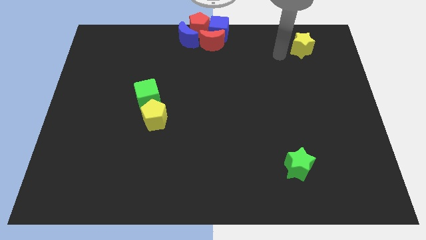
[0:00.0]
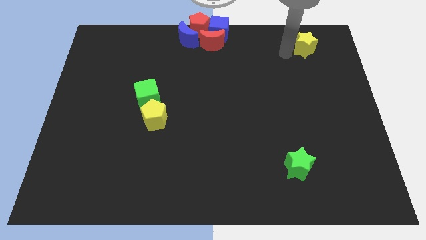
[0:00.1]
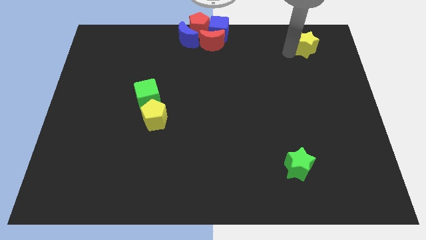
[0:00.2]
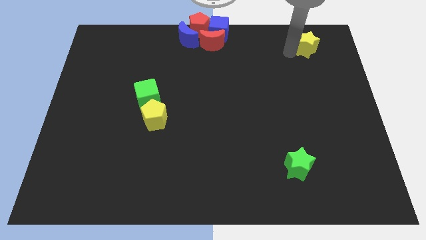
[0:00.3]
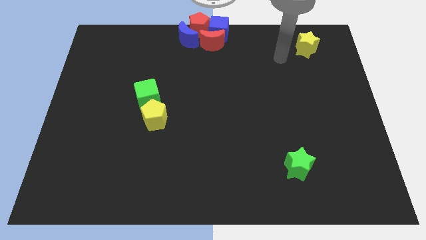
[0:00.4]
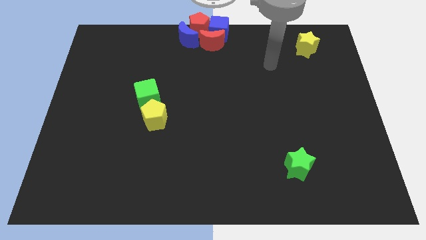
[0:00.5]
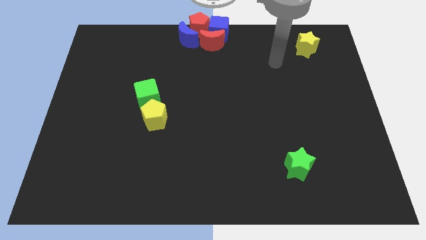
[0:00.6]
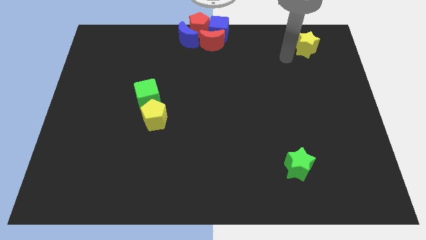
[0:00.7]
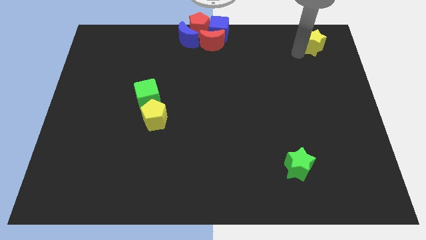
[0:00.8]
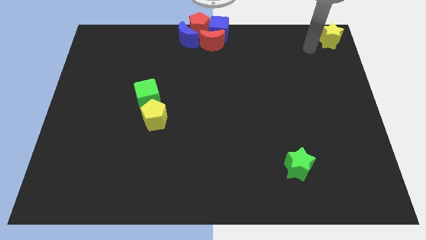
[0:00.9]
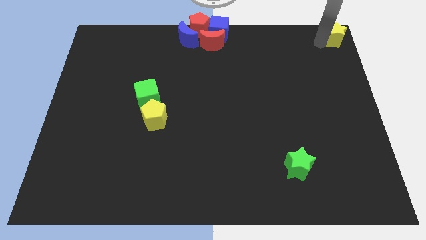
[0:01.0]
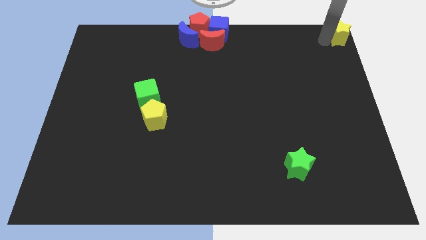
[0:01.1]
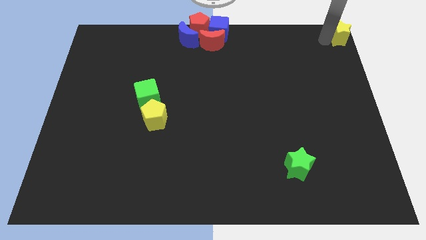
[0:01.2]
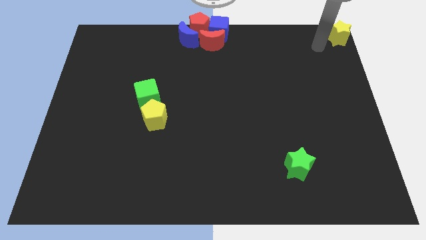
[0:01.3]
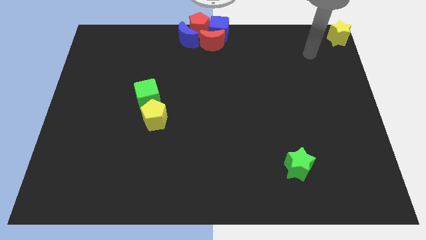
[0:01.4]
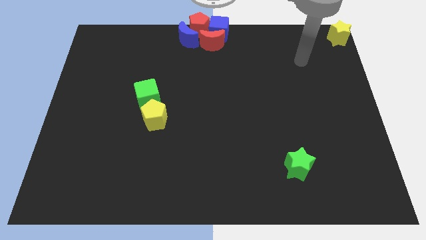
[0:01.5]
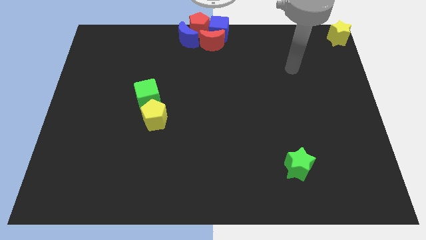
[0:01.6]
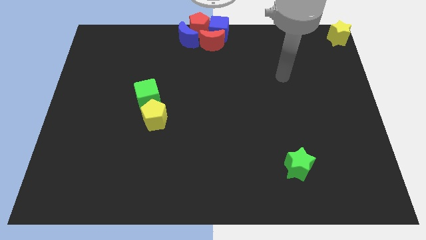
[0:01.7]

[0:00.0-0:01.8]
push the yellow star to the top right corner of the board

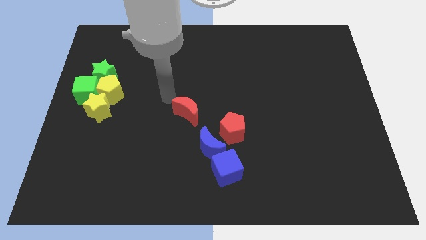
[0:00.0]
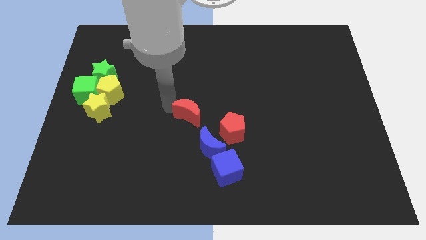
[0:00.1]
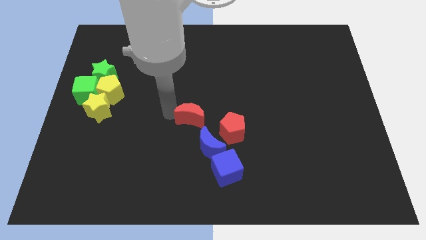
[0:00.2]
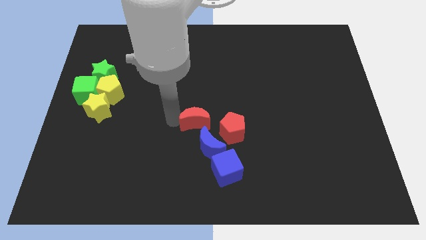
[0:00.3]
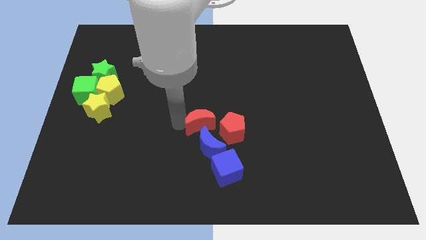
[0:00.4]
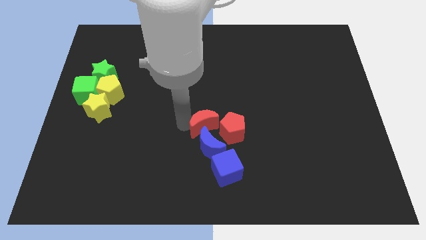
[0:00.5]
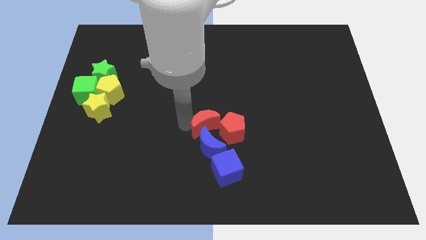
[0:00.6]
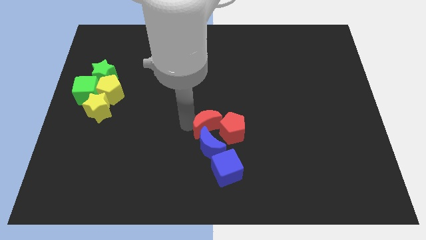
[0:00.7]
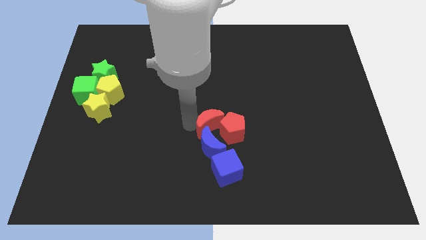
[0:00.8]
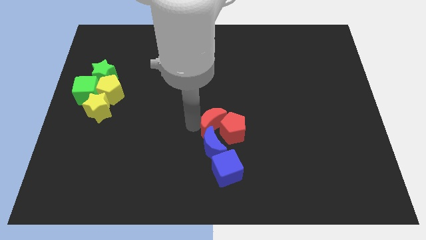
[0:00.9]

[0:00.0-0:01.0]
push red moon into the red pentagon and the blue moon

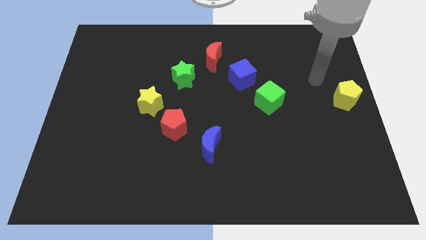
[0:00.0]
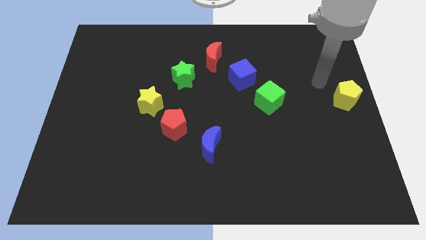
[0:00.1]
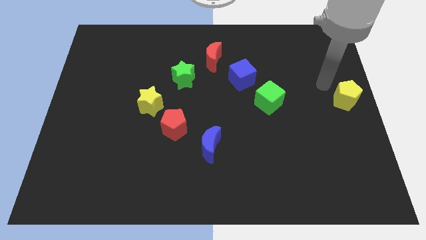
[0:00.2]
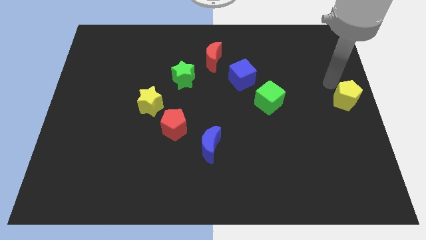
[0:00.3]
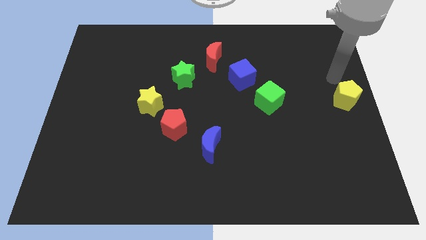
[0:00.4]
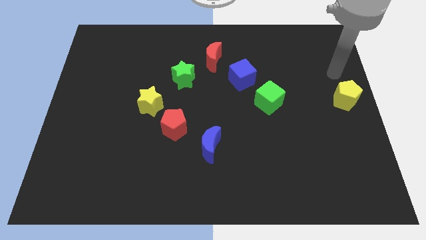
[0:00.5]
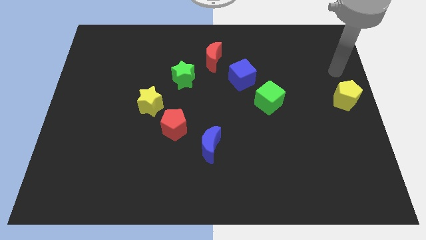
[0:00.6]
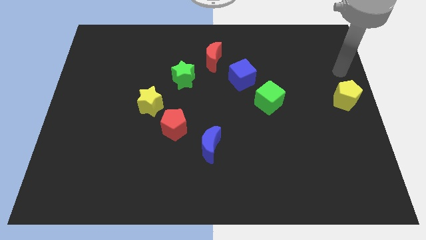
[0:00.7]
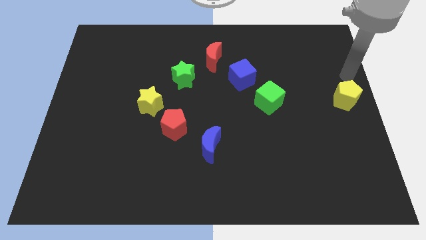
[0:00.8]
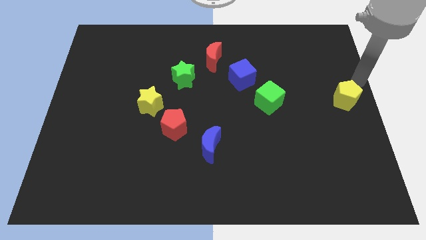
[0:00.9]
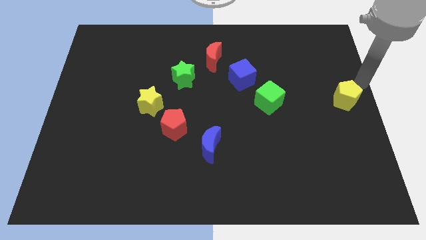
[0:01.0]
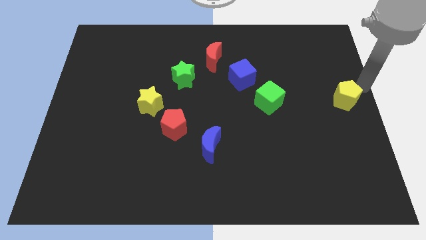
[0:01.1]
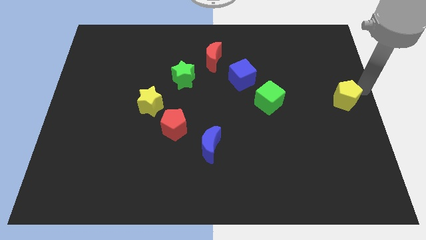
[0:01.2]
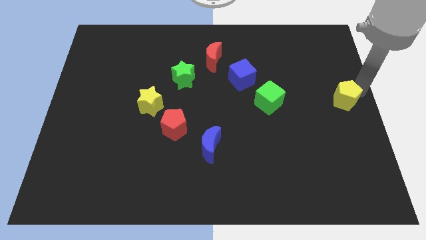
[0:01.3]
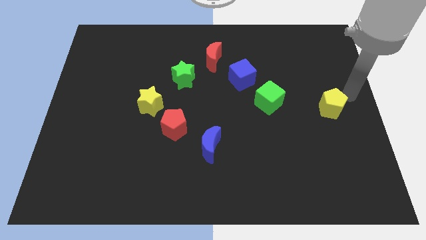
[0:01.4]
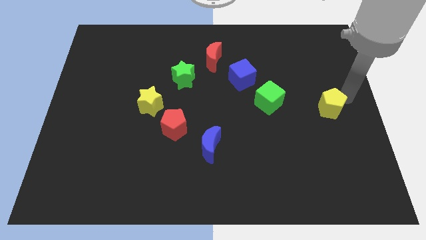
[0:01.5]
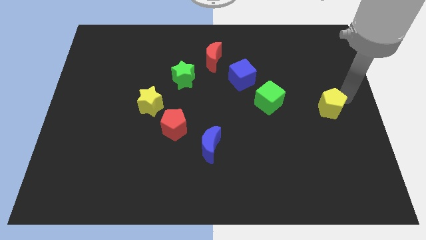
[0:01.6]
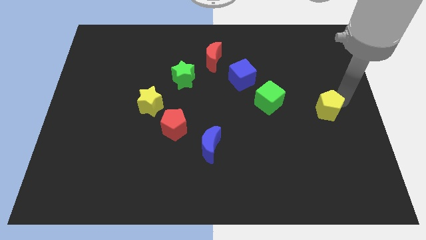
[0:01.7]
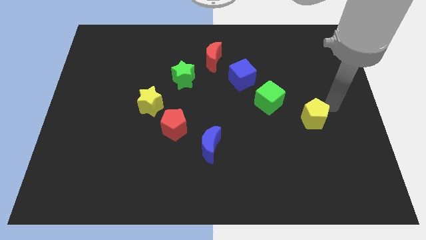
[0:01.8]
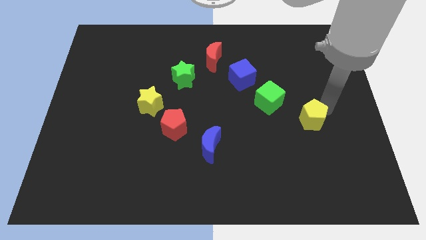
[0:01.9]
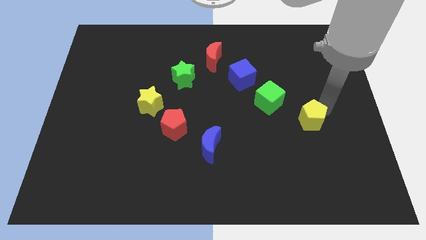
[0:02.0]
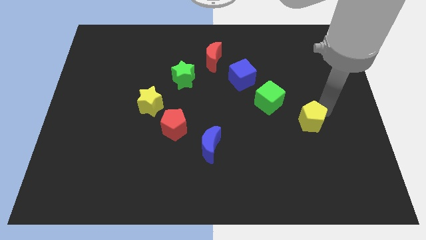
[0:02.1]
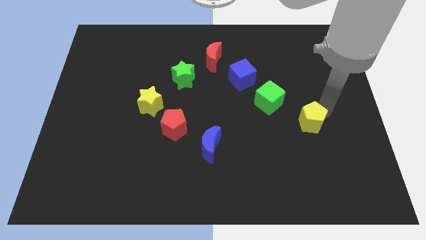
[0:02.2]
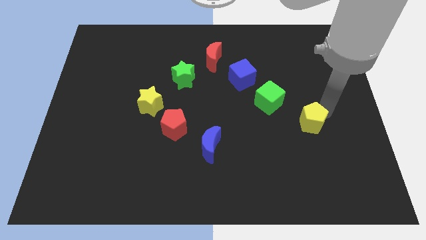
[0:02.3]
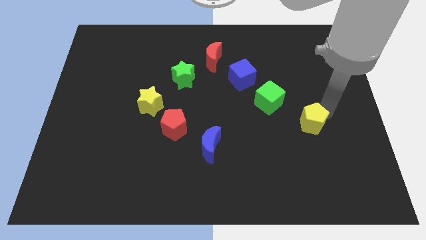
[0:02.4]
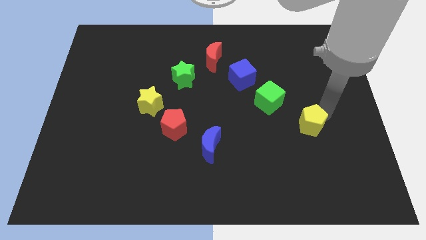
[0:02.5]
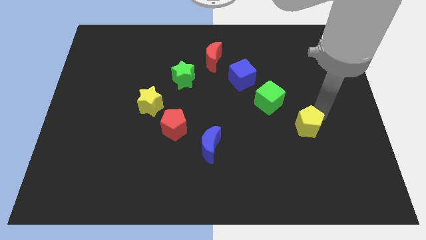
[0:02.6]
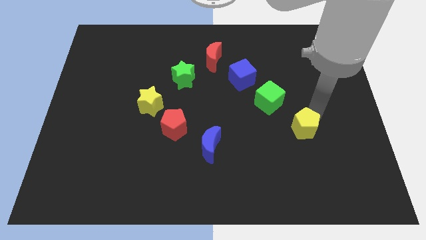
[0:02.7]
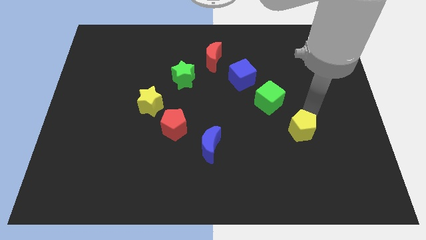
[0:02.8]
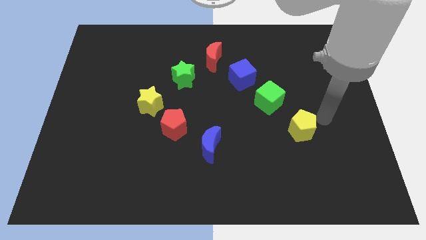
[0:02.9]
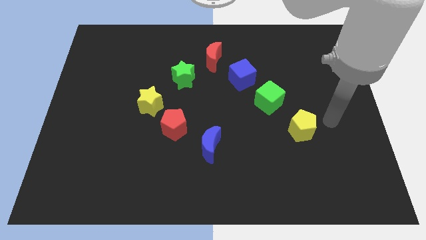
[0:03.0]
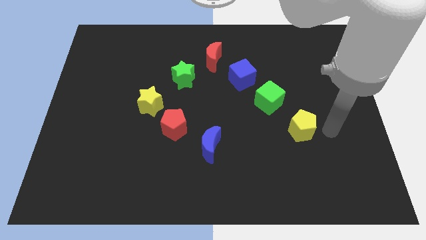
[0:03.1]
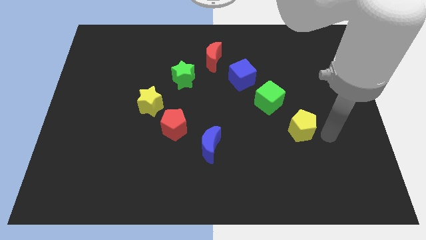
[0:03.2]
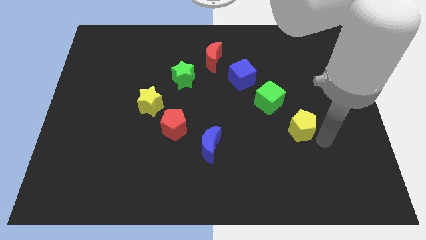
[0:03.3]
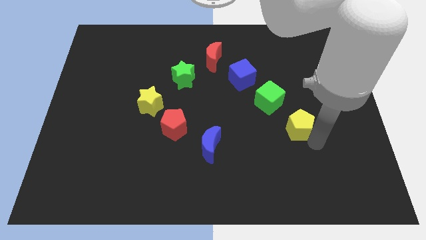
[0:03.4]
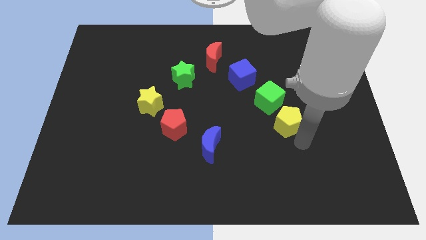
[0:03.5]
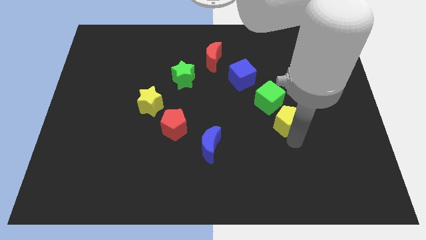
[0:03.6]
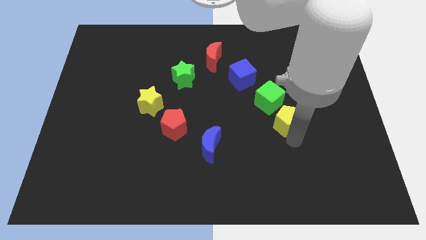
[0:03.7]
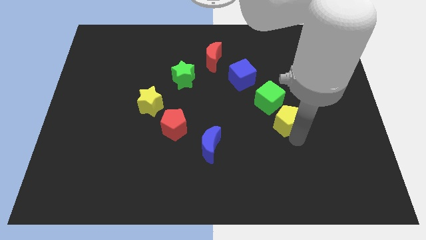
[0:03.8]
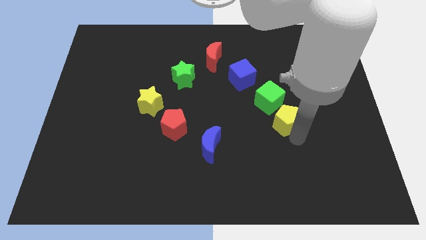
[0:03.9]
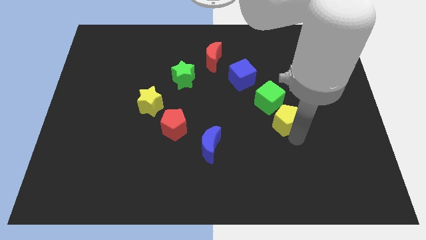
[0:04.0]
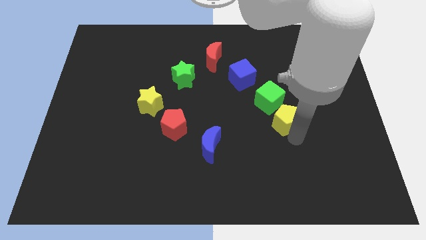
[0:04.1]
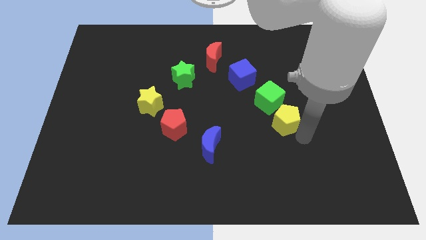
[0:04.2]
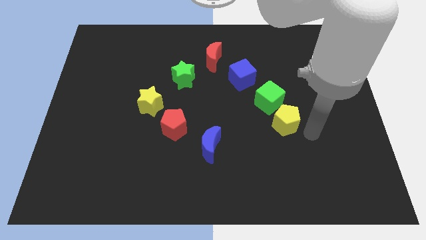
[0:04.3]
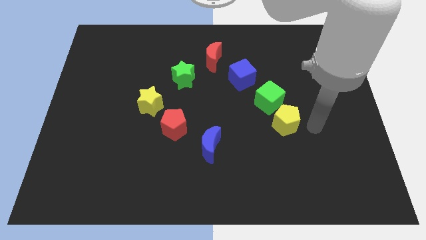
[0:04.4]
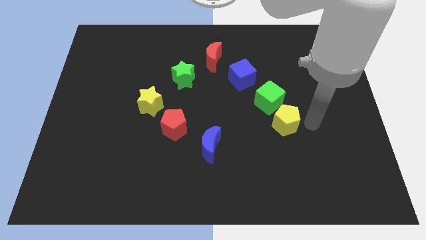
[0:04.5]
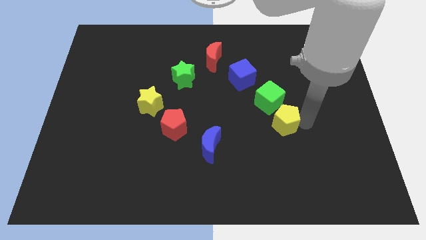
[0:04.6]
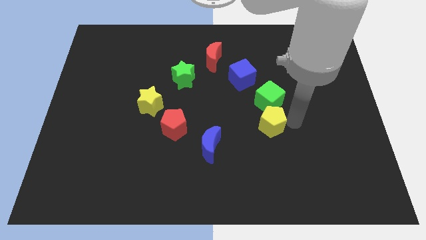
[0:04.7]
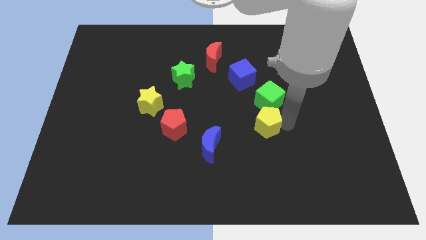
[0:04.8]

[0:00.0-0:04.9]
push the yellow pentagon to the bottom of the green cube

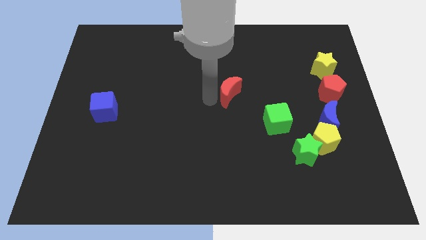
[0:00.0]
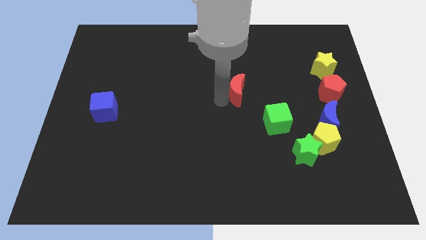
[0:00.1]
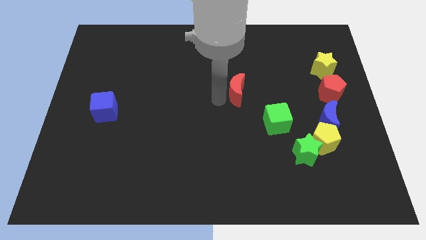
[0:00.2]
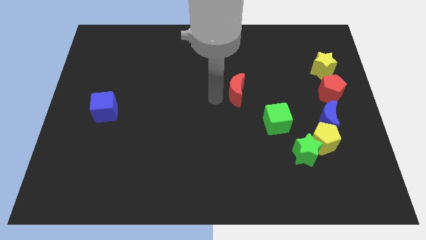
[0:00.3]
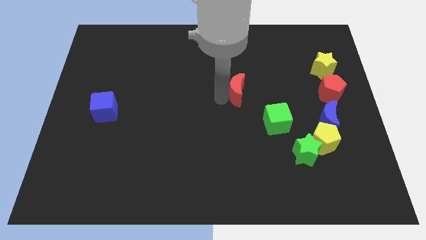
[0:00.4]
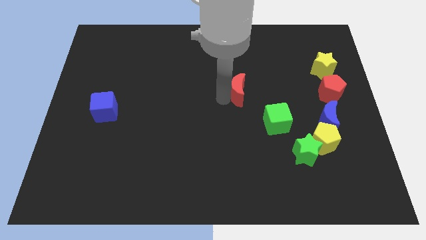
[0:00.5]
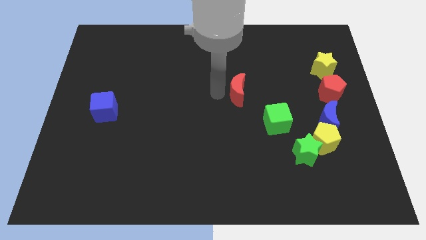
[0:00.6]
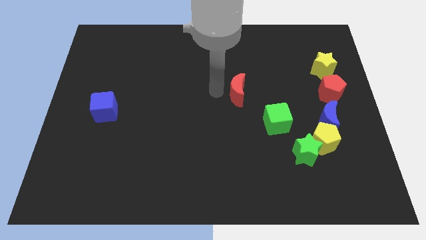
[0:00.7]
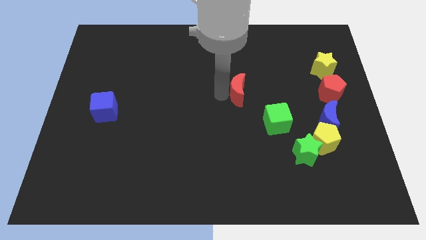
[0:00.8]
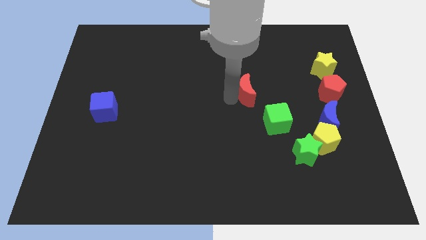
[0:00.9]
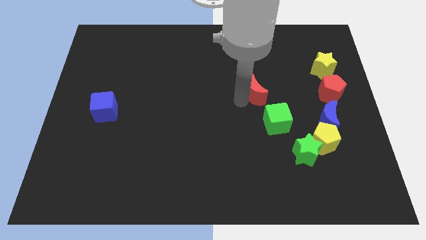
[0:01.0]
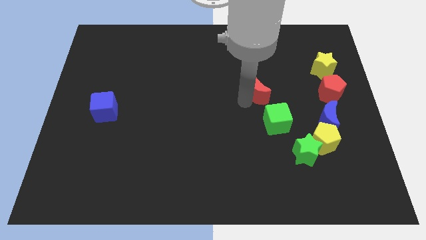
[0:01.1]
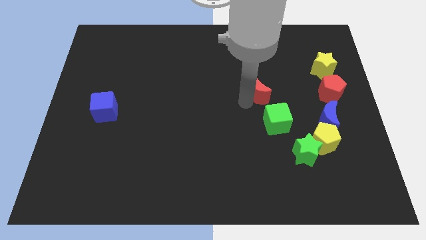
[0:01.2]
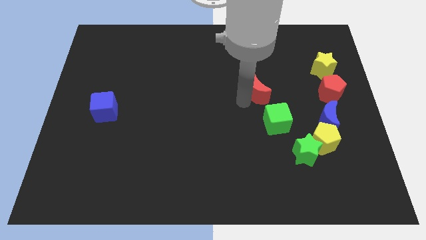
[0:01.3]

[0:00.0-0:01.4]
place the red crescent on top of green cube
